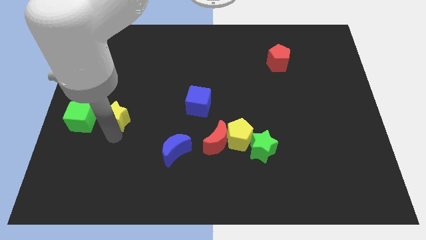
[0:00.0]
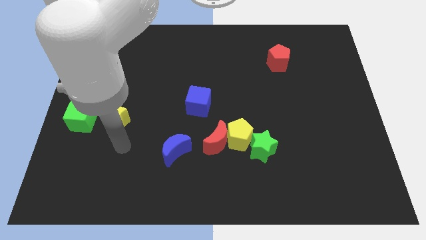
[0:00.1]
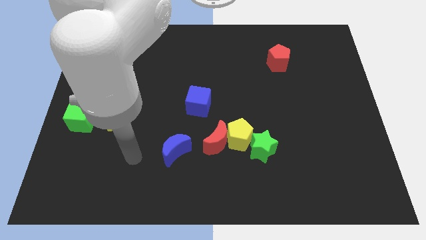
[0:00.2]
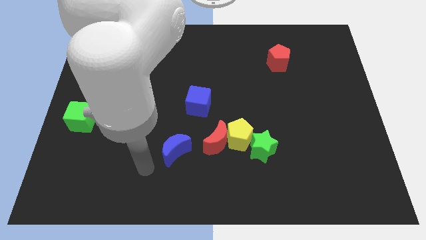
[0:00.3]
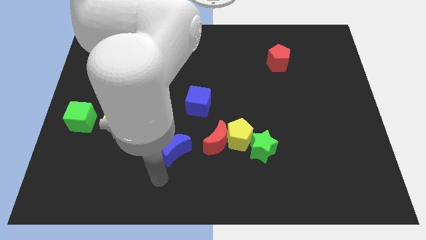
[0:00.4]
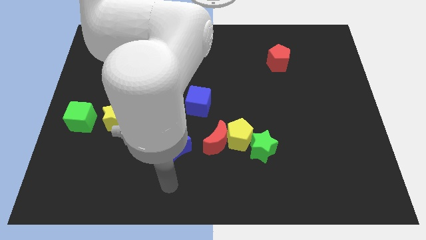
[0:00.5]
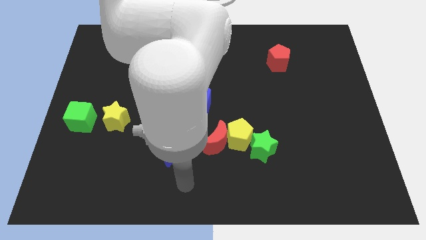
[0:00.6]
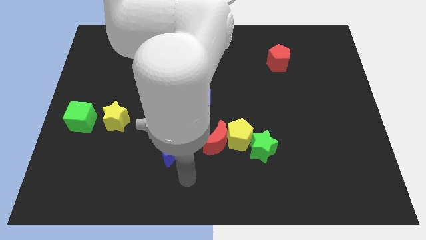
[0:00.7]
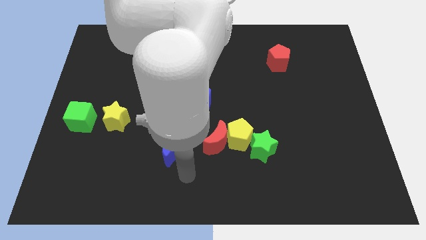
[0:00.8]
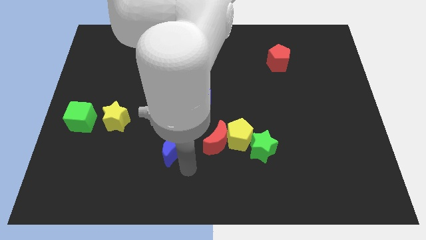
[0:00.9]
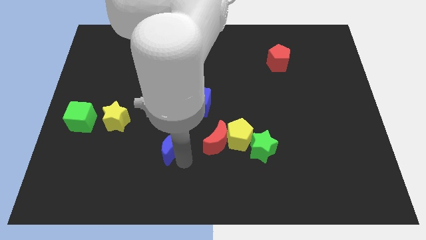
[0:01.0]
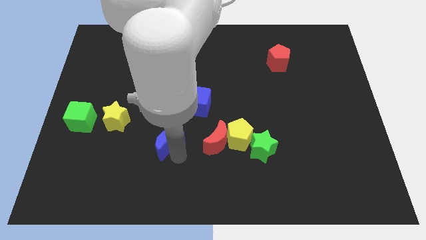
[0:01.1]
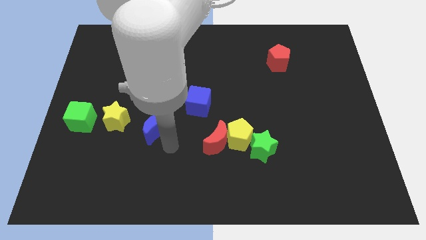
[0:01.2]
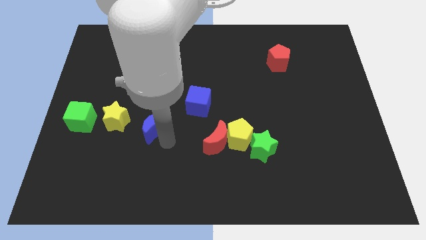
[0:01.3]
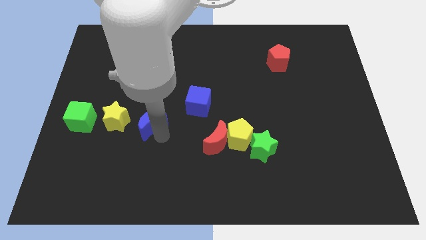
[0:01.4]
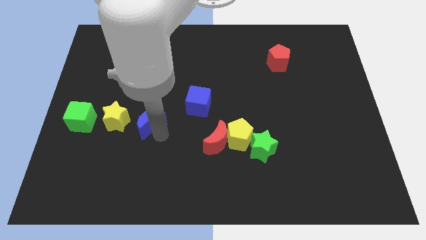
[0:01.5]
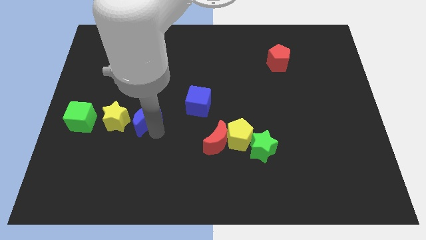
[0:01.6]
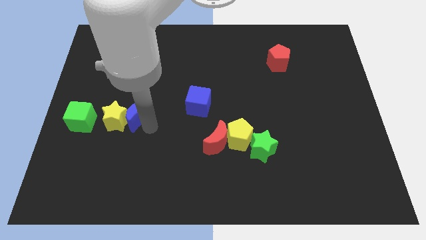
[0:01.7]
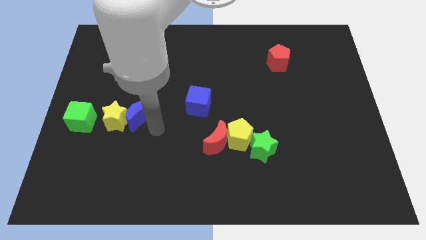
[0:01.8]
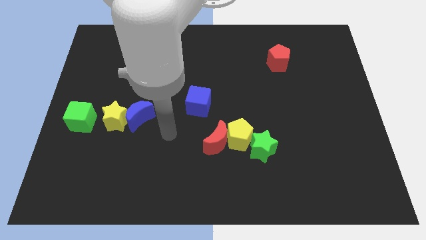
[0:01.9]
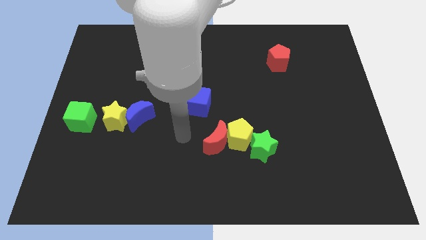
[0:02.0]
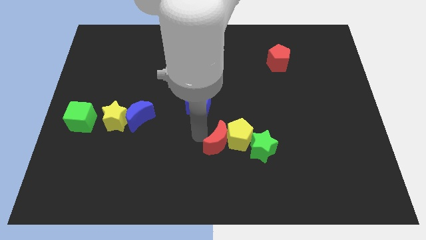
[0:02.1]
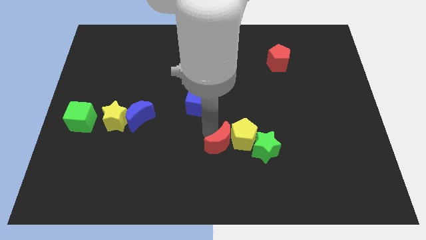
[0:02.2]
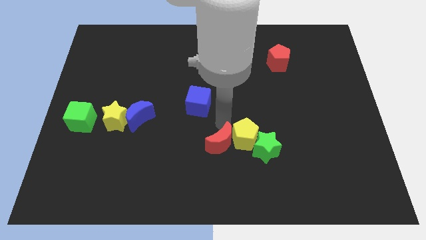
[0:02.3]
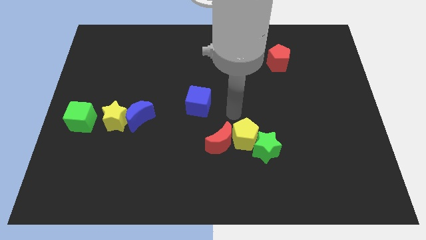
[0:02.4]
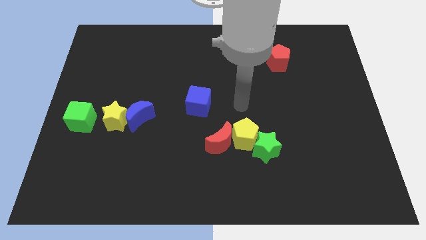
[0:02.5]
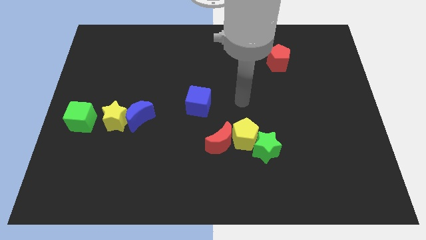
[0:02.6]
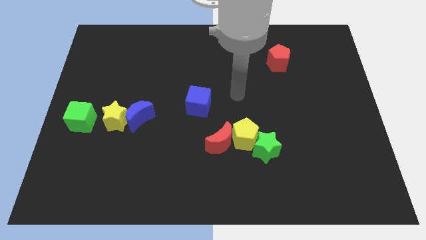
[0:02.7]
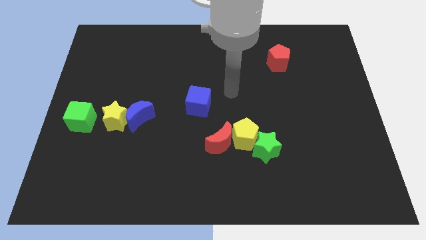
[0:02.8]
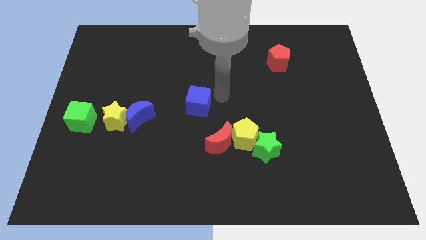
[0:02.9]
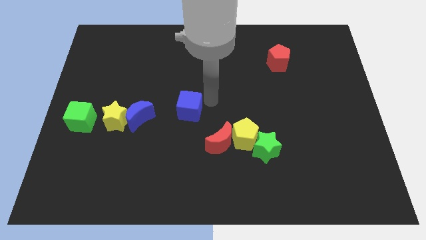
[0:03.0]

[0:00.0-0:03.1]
place the blue moon right to the yellow star

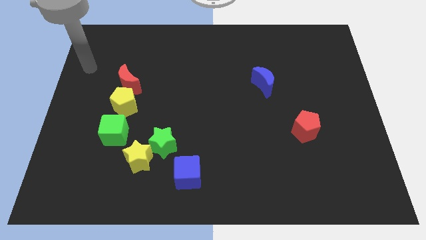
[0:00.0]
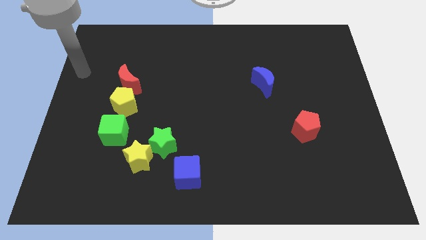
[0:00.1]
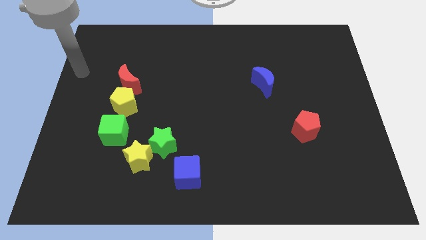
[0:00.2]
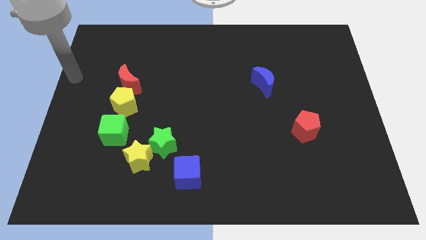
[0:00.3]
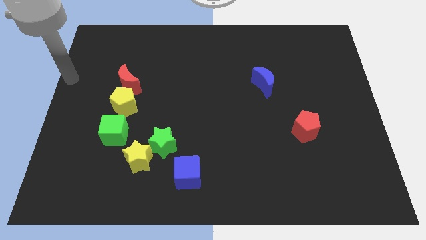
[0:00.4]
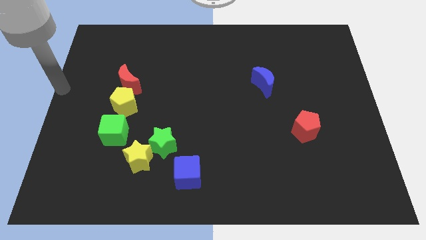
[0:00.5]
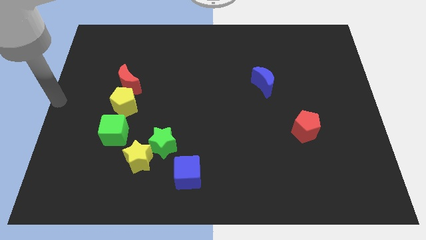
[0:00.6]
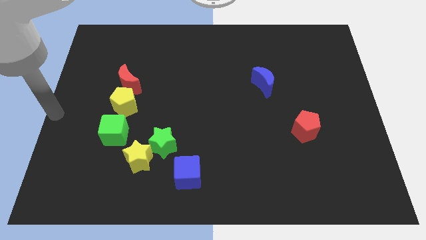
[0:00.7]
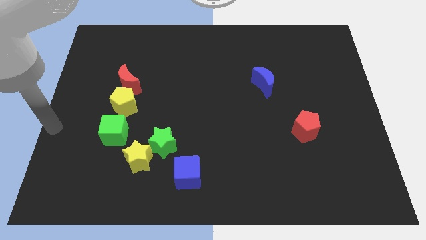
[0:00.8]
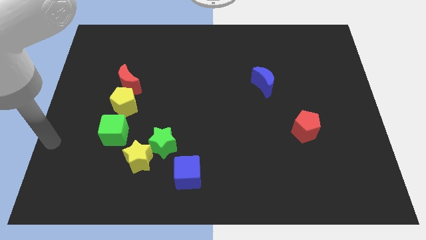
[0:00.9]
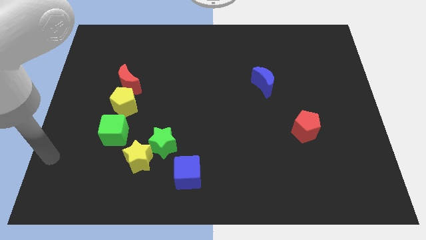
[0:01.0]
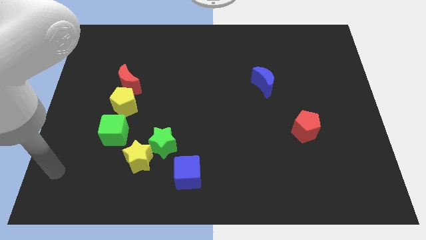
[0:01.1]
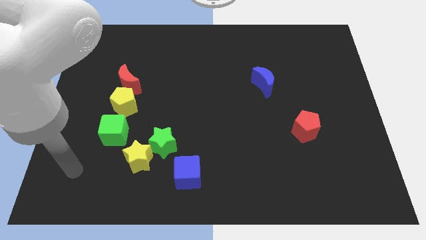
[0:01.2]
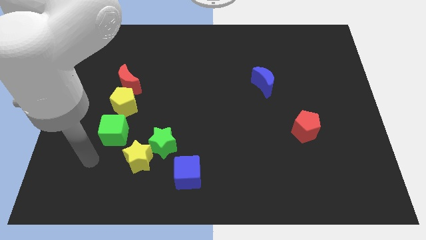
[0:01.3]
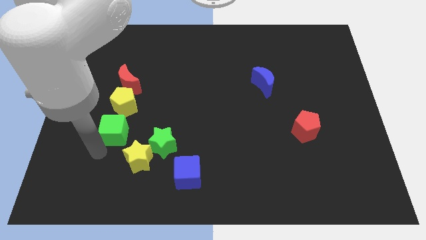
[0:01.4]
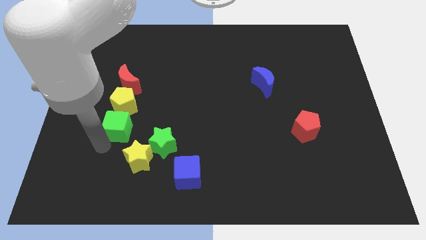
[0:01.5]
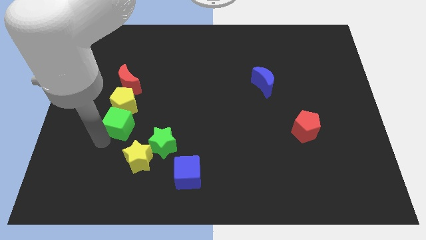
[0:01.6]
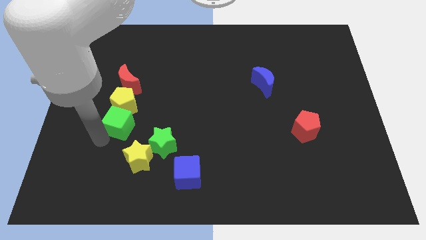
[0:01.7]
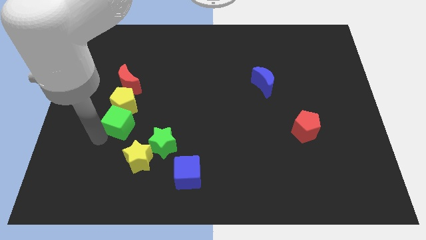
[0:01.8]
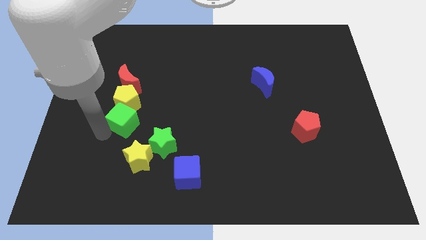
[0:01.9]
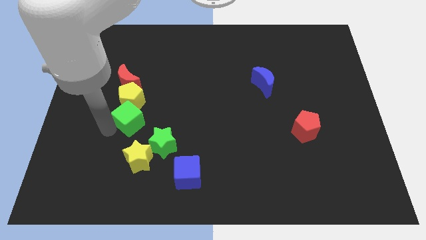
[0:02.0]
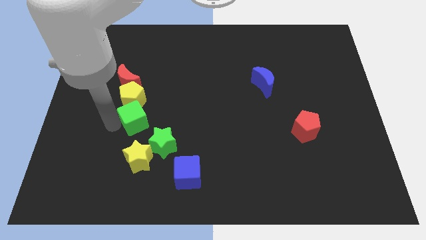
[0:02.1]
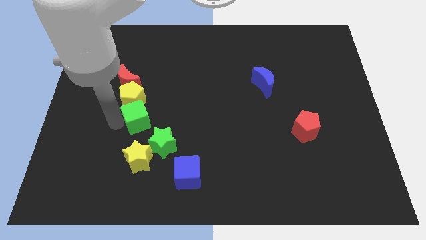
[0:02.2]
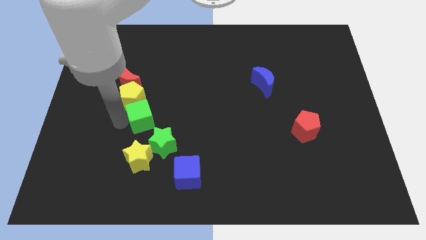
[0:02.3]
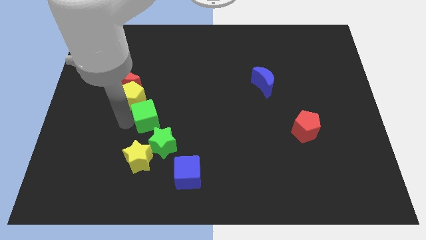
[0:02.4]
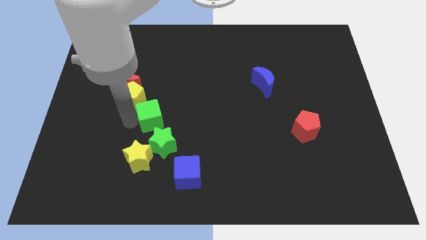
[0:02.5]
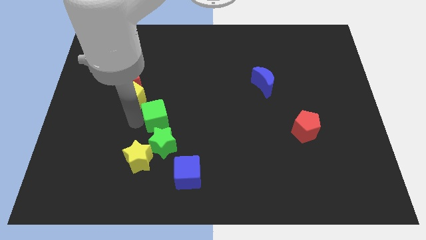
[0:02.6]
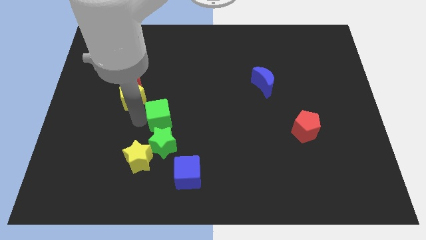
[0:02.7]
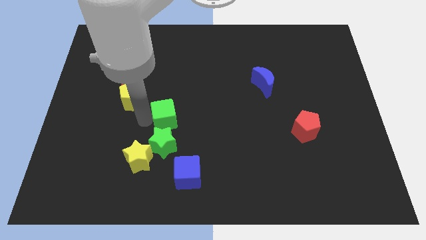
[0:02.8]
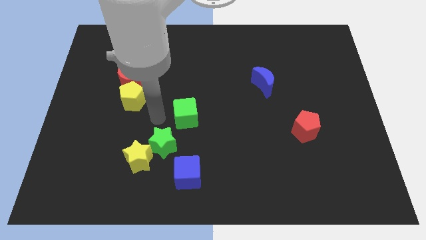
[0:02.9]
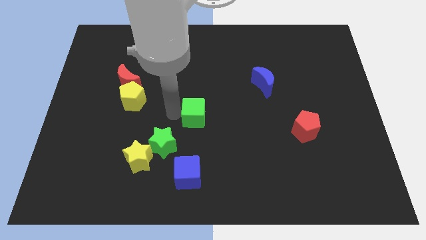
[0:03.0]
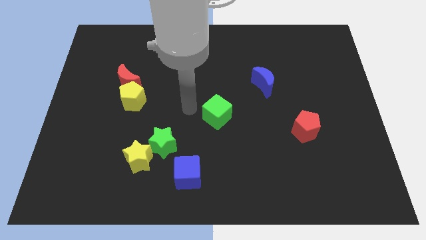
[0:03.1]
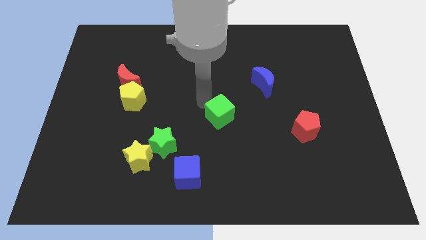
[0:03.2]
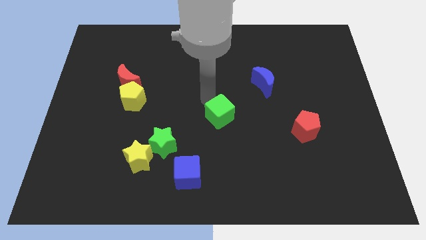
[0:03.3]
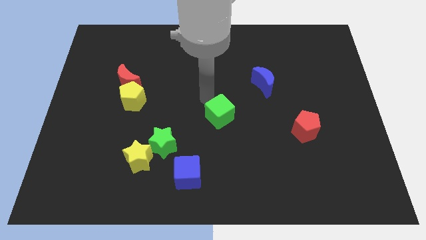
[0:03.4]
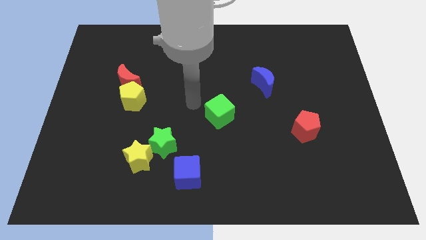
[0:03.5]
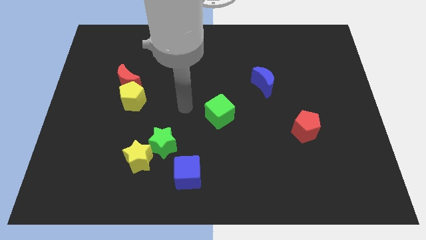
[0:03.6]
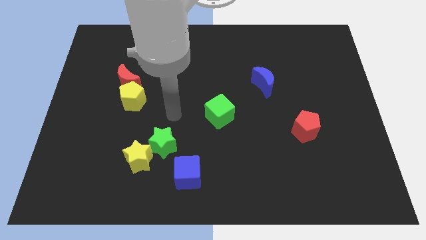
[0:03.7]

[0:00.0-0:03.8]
move the green cube to the center of the board

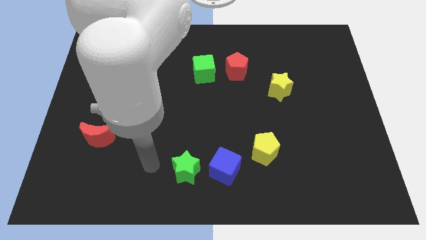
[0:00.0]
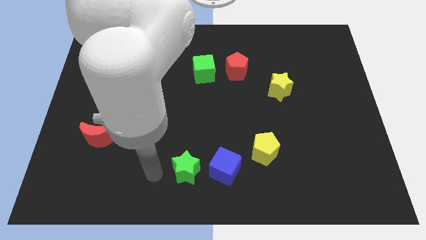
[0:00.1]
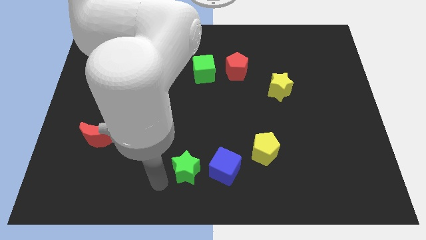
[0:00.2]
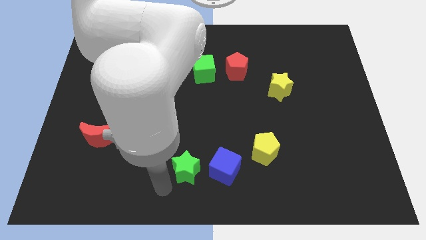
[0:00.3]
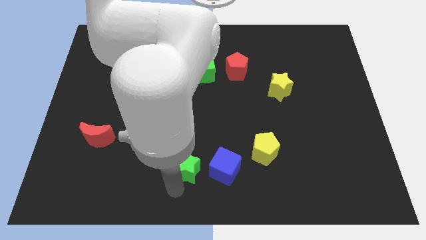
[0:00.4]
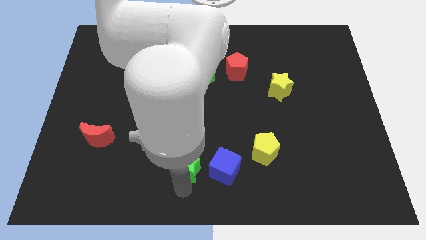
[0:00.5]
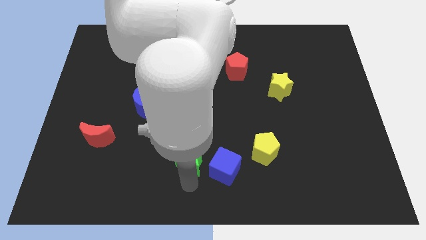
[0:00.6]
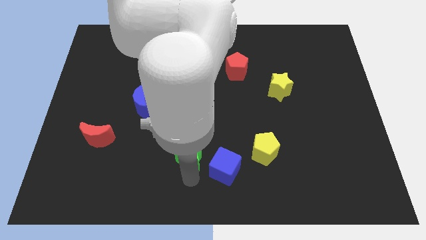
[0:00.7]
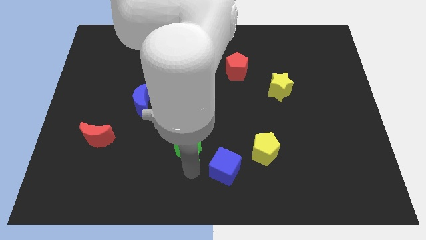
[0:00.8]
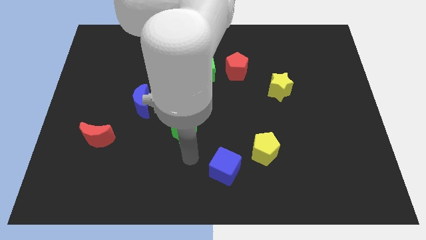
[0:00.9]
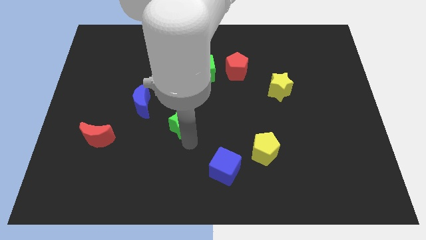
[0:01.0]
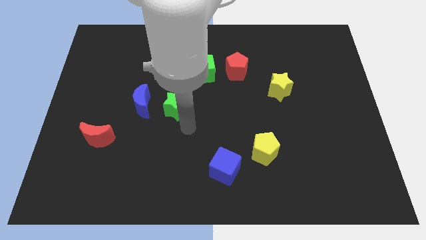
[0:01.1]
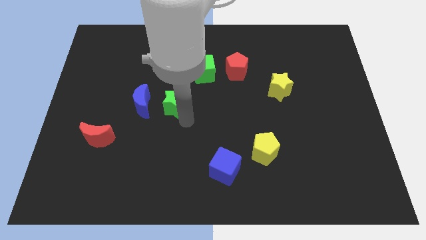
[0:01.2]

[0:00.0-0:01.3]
push green star upwards

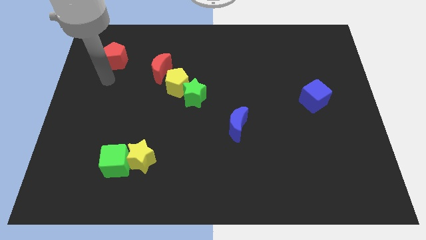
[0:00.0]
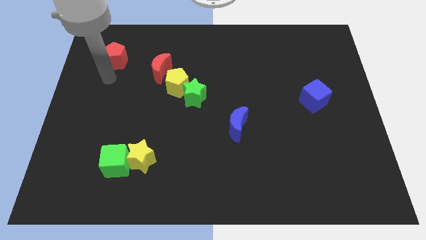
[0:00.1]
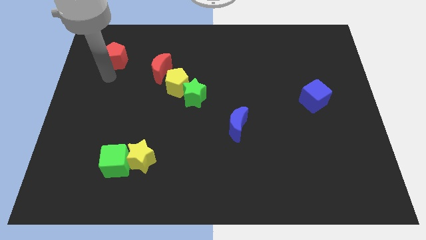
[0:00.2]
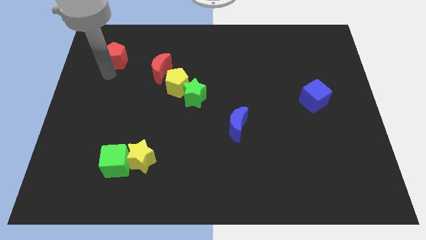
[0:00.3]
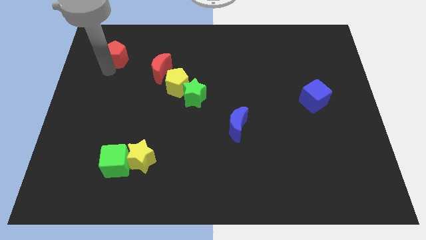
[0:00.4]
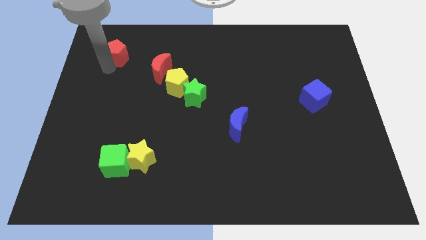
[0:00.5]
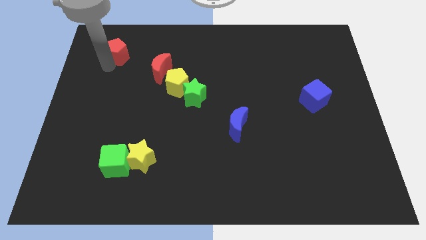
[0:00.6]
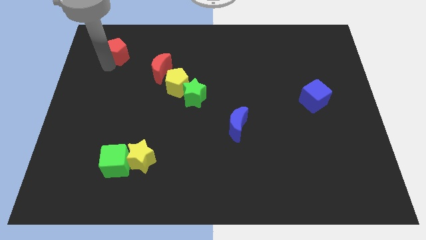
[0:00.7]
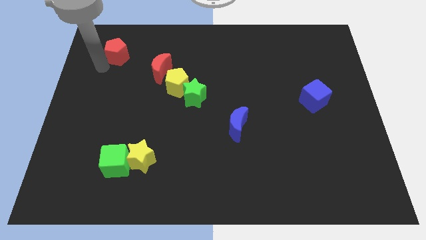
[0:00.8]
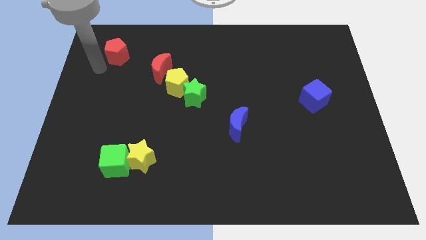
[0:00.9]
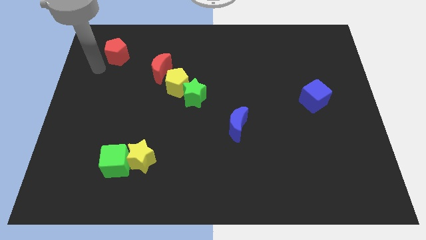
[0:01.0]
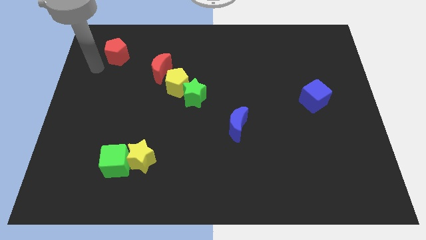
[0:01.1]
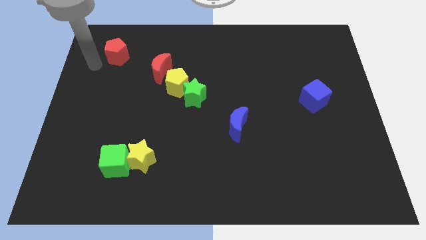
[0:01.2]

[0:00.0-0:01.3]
push the red pentagon slightly up
